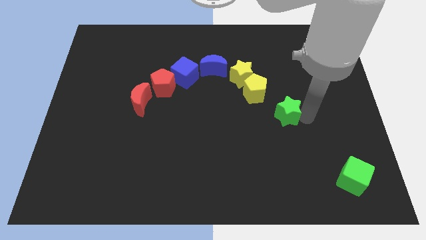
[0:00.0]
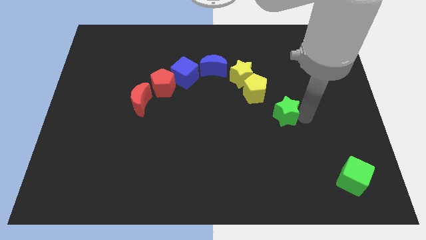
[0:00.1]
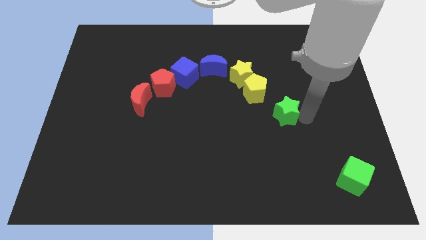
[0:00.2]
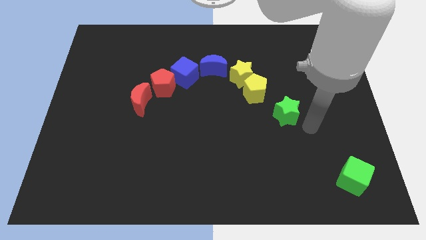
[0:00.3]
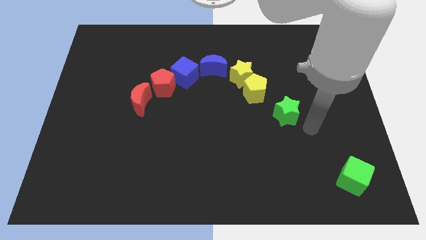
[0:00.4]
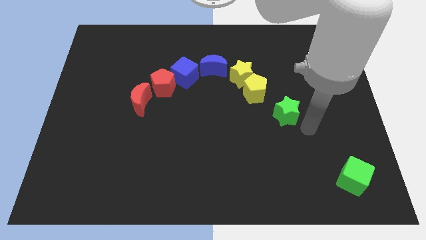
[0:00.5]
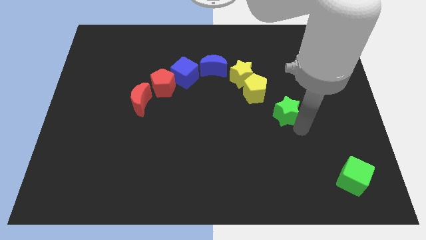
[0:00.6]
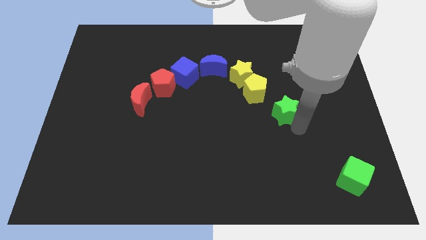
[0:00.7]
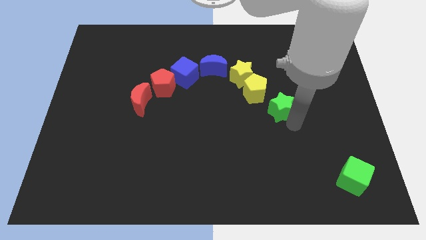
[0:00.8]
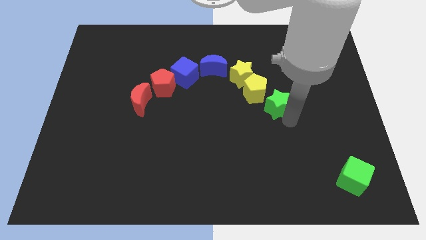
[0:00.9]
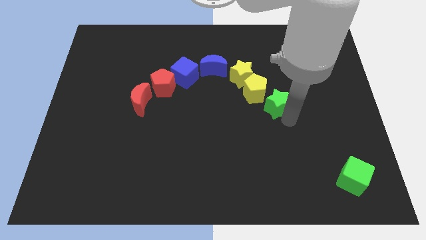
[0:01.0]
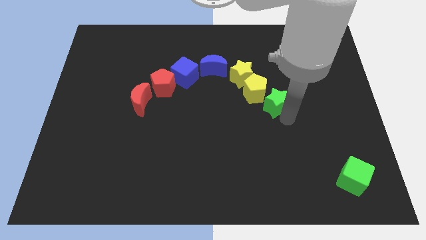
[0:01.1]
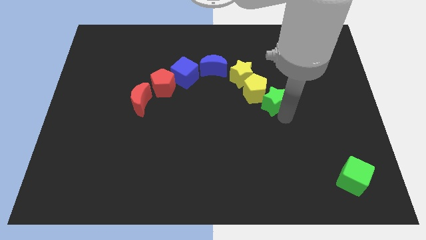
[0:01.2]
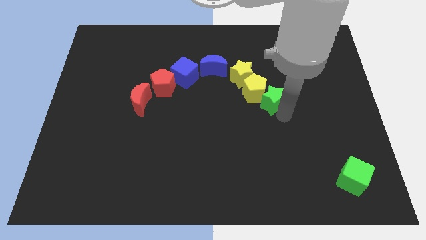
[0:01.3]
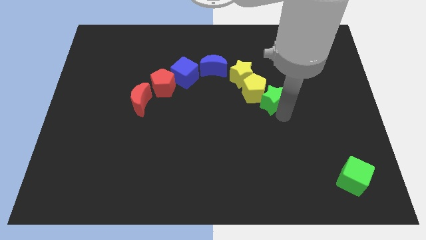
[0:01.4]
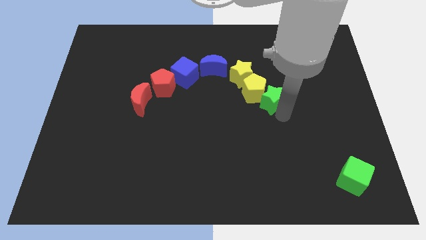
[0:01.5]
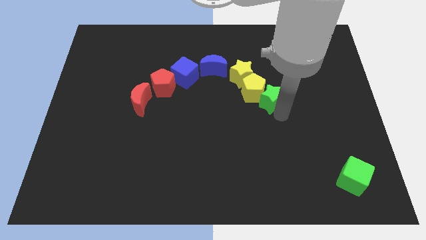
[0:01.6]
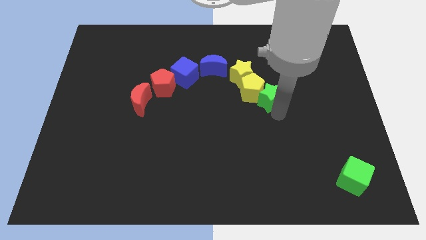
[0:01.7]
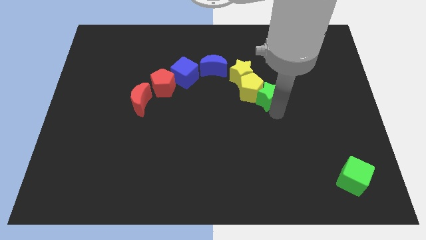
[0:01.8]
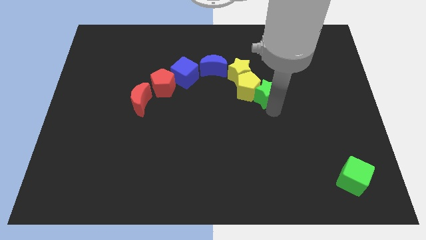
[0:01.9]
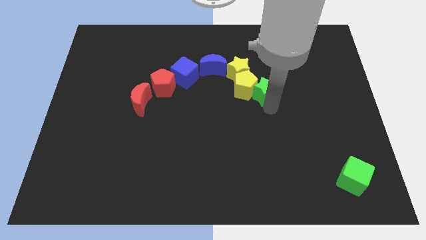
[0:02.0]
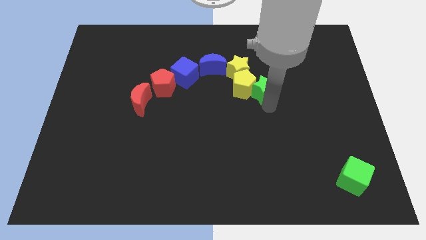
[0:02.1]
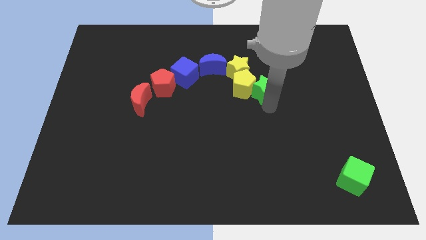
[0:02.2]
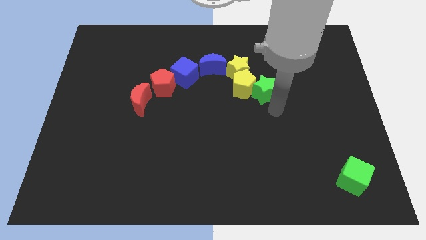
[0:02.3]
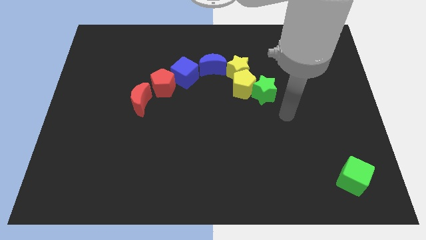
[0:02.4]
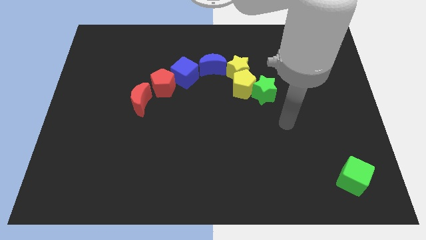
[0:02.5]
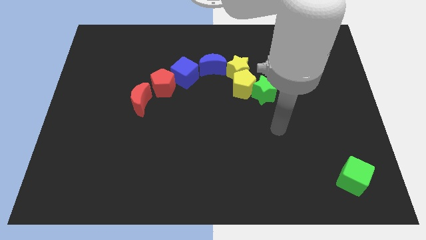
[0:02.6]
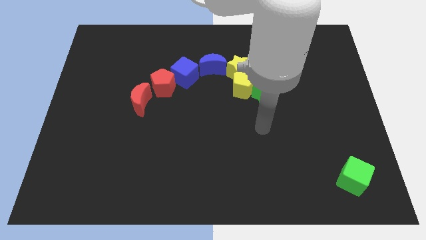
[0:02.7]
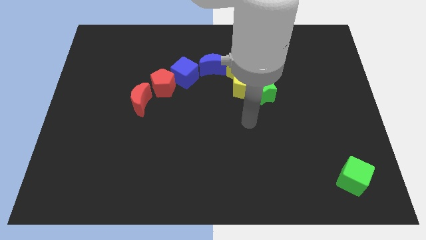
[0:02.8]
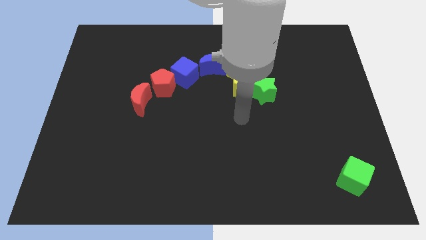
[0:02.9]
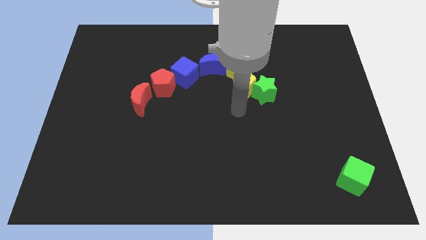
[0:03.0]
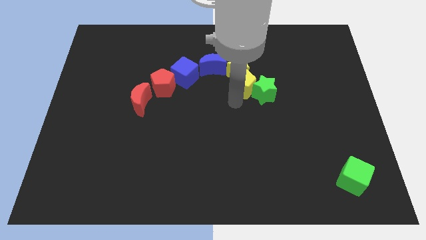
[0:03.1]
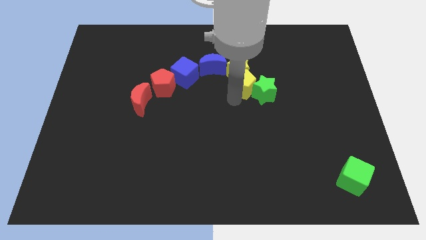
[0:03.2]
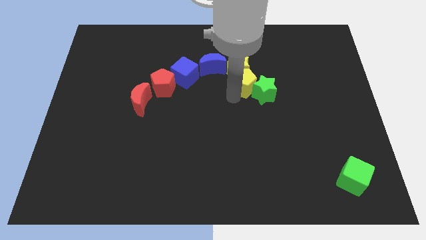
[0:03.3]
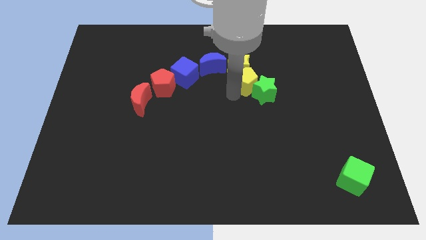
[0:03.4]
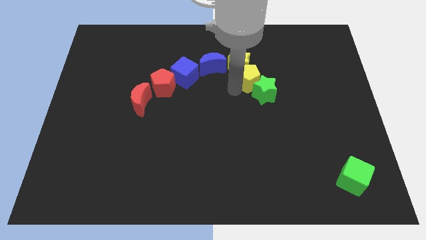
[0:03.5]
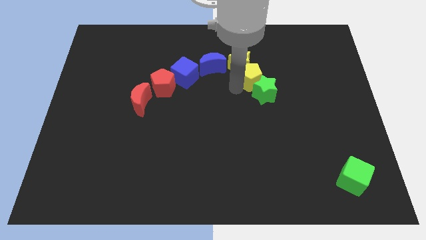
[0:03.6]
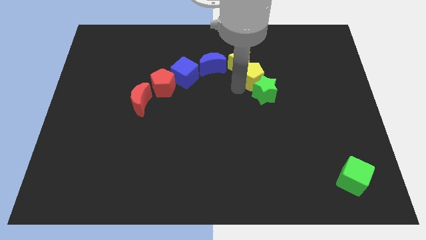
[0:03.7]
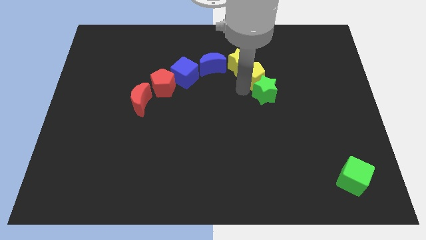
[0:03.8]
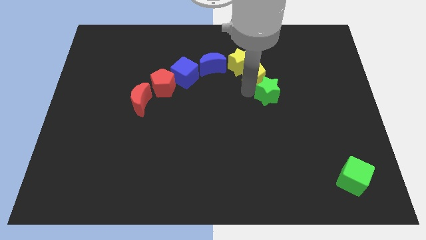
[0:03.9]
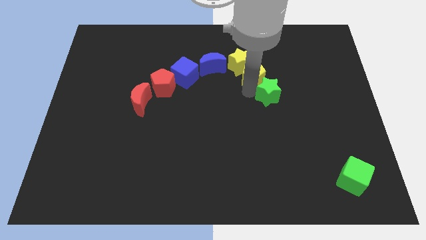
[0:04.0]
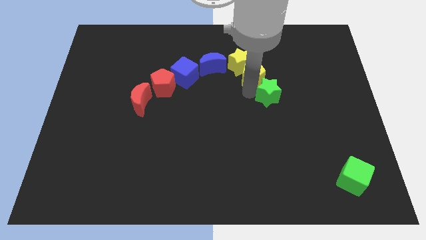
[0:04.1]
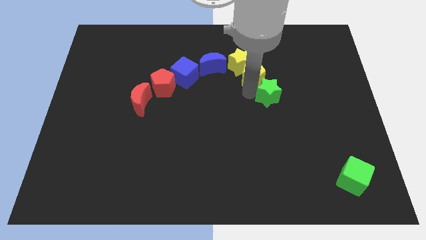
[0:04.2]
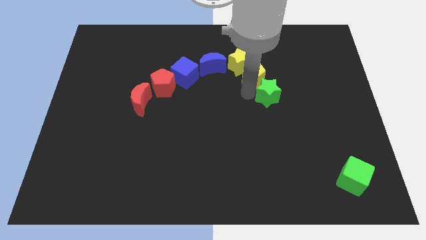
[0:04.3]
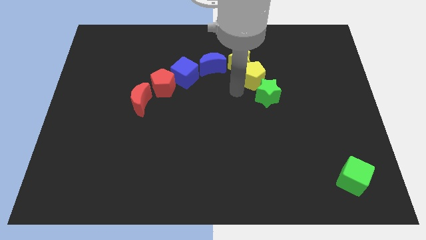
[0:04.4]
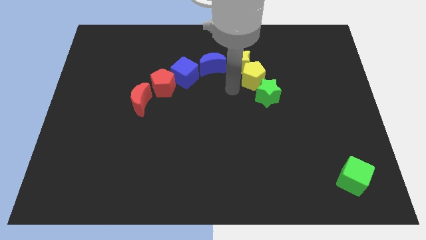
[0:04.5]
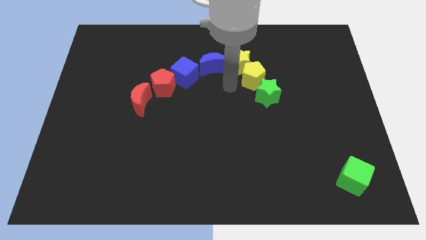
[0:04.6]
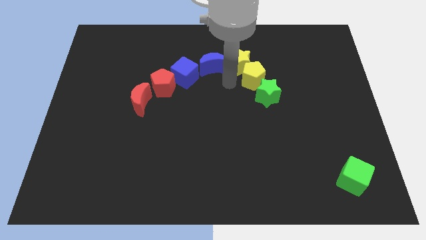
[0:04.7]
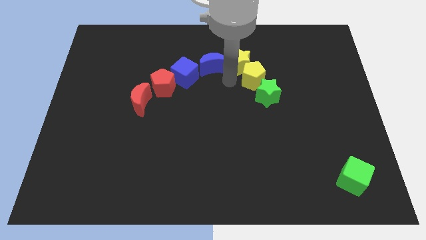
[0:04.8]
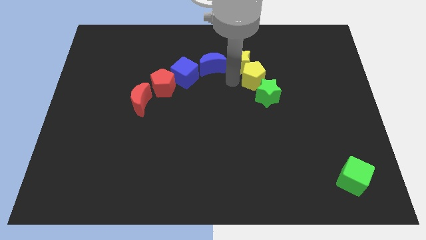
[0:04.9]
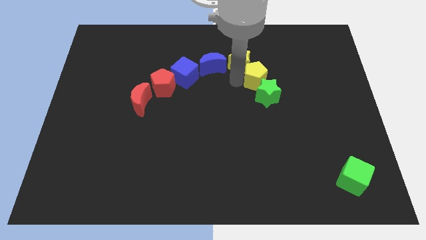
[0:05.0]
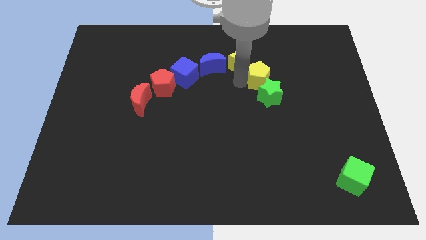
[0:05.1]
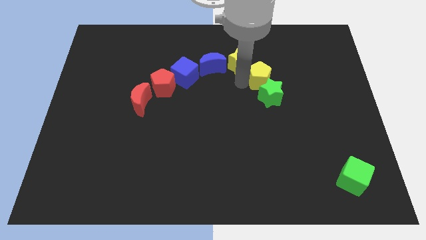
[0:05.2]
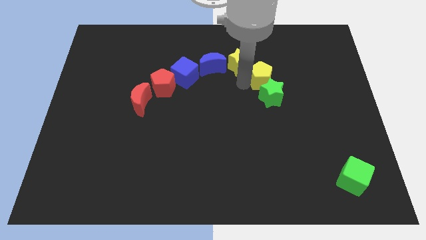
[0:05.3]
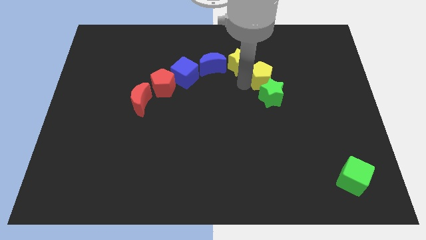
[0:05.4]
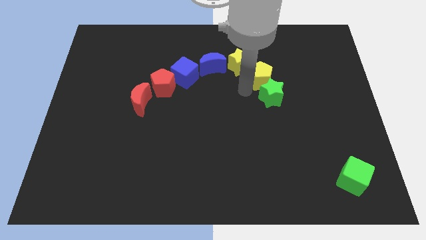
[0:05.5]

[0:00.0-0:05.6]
move the green star close to yellow pentagon

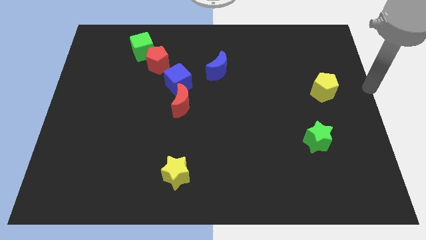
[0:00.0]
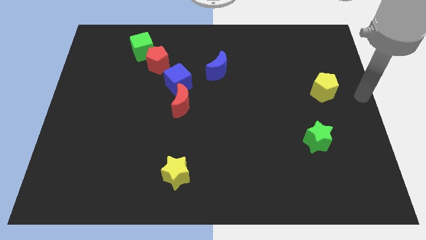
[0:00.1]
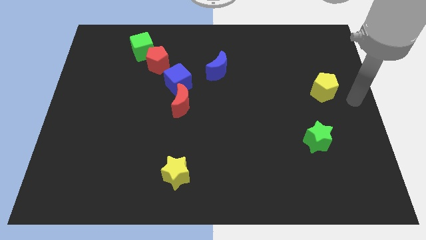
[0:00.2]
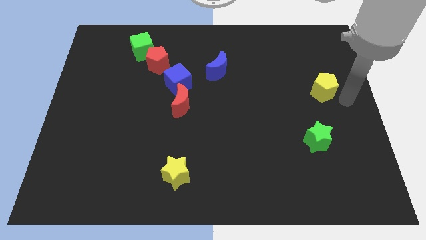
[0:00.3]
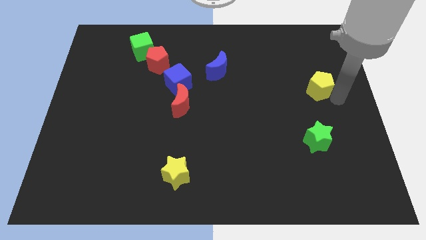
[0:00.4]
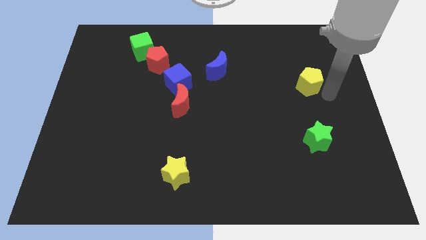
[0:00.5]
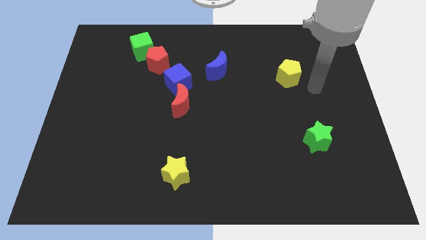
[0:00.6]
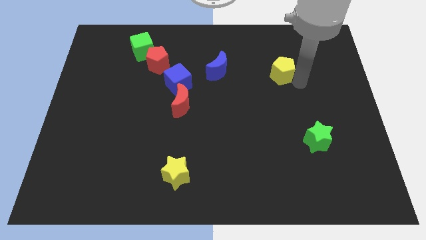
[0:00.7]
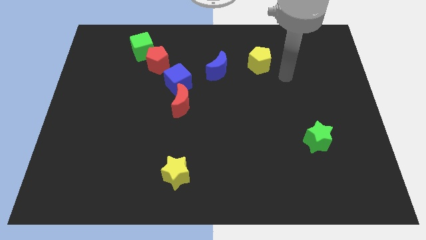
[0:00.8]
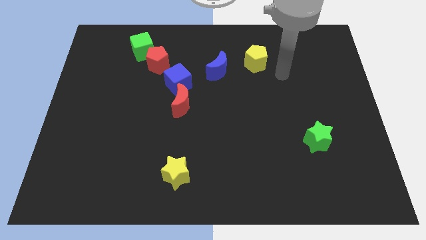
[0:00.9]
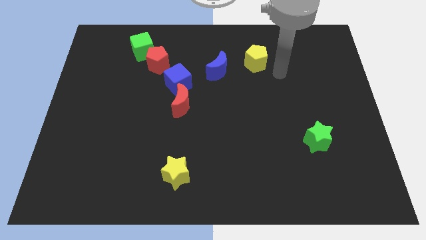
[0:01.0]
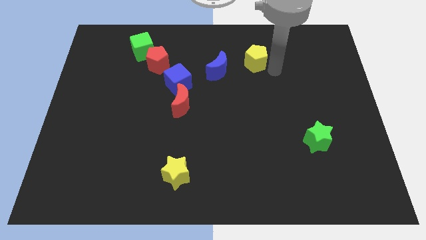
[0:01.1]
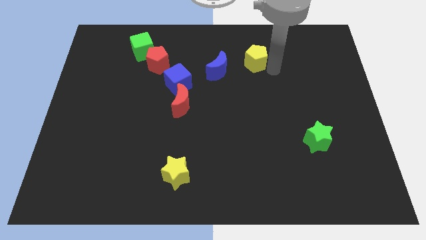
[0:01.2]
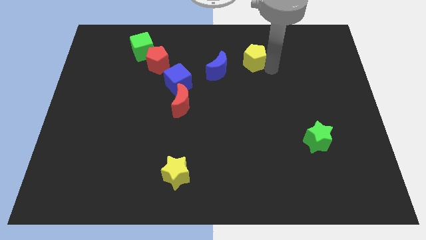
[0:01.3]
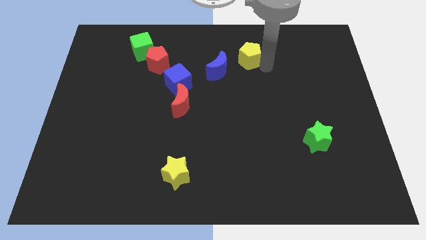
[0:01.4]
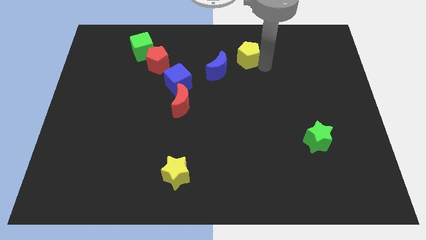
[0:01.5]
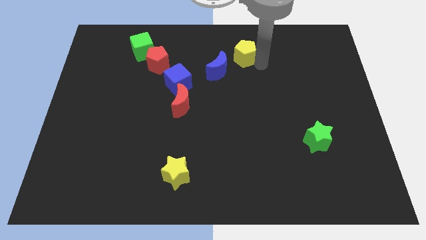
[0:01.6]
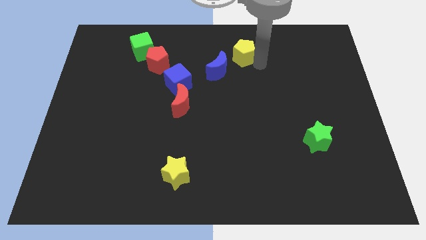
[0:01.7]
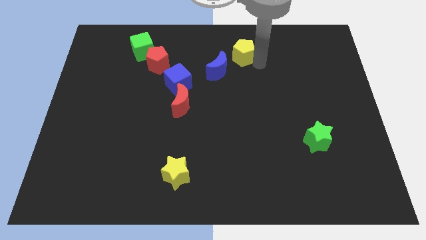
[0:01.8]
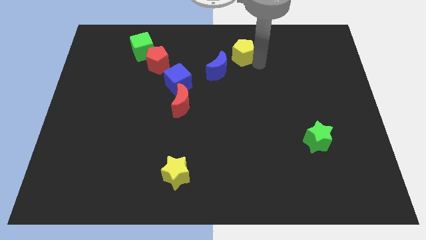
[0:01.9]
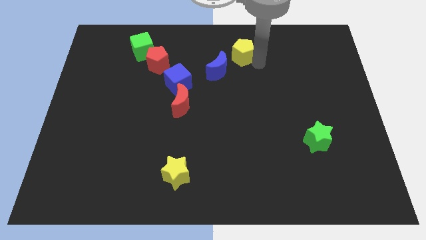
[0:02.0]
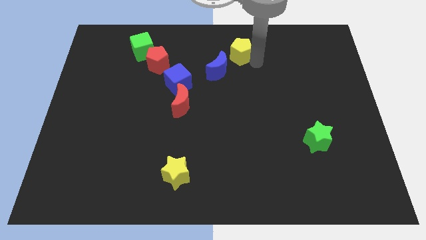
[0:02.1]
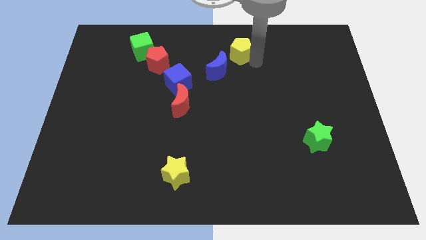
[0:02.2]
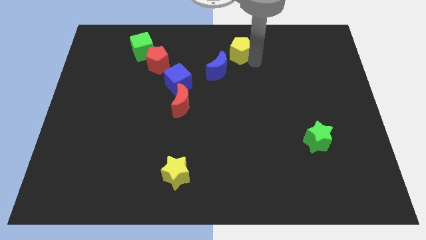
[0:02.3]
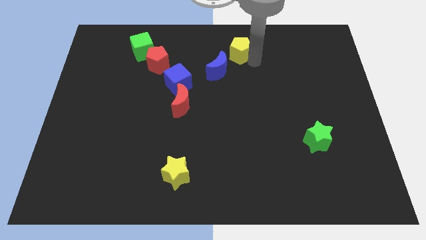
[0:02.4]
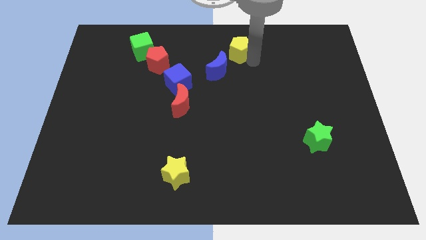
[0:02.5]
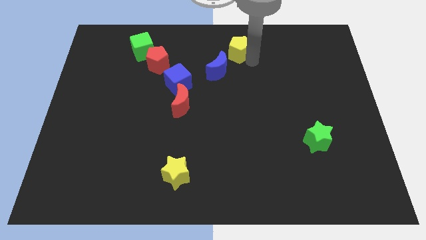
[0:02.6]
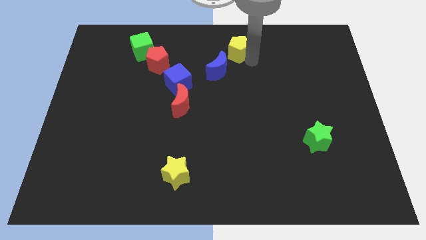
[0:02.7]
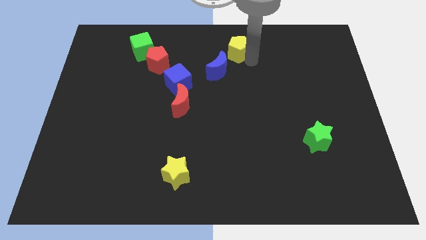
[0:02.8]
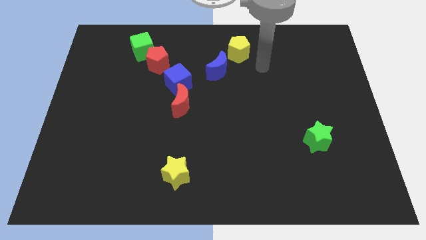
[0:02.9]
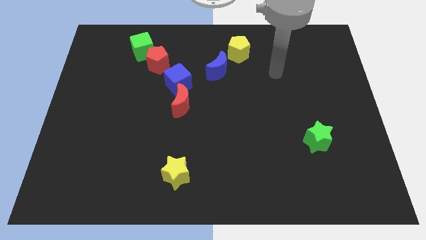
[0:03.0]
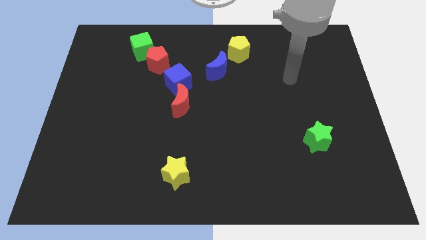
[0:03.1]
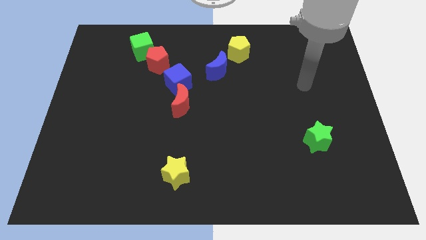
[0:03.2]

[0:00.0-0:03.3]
place yellow pentagon to the top right of the blue moon
